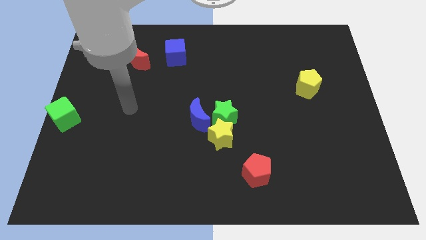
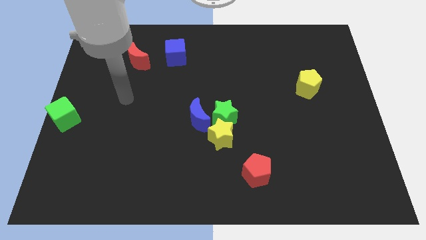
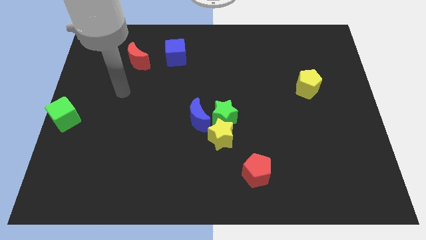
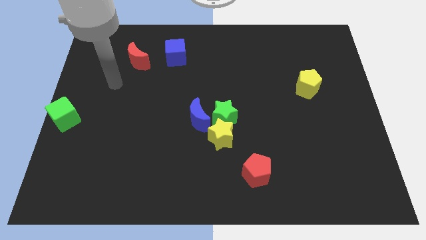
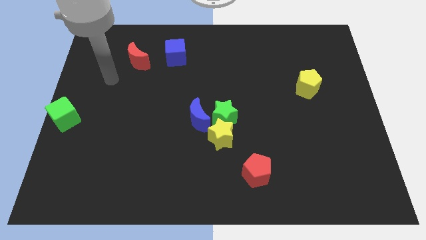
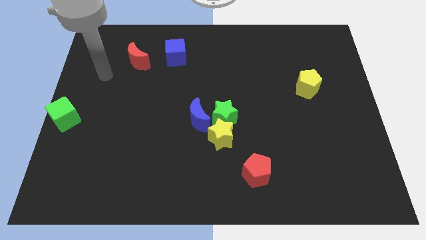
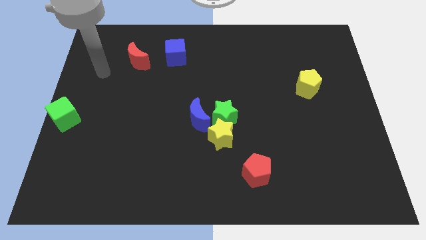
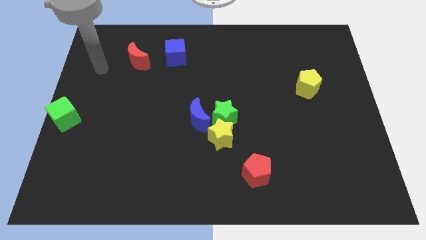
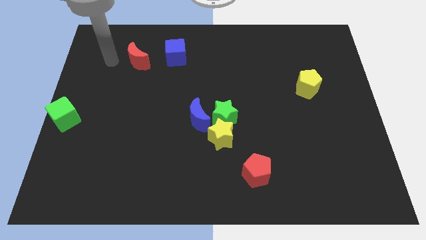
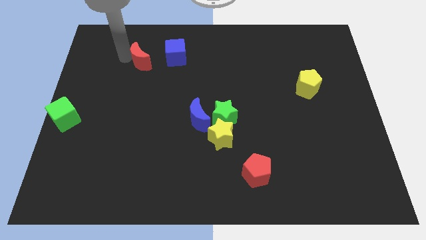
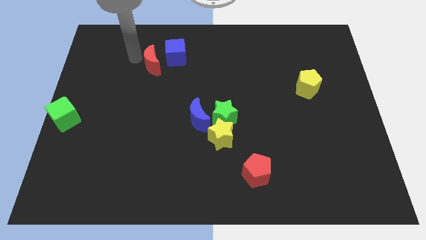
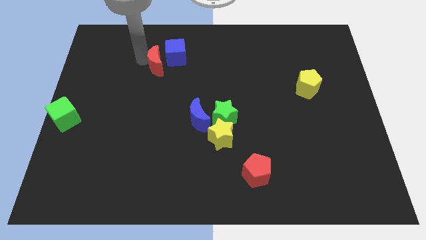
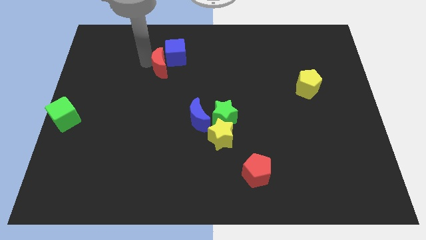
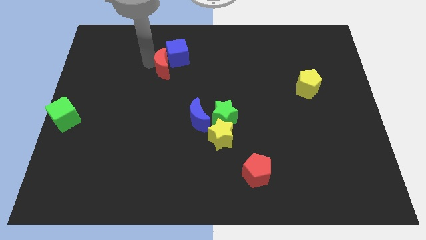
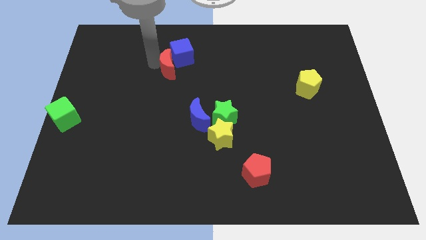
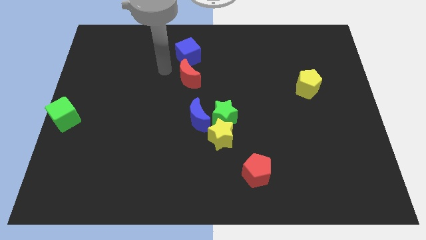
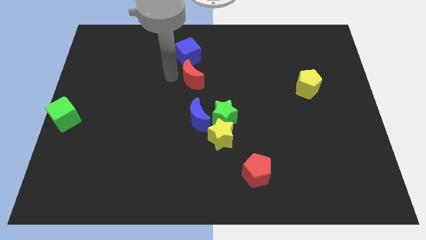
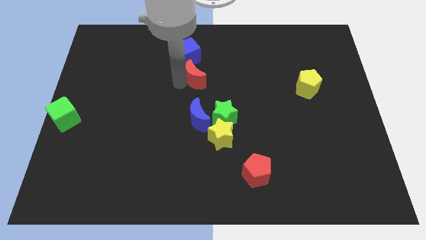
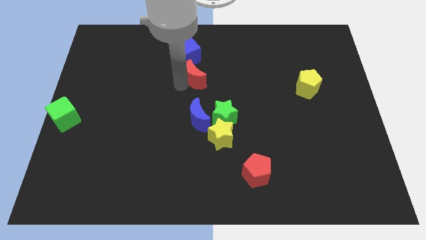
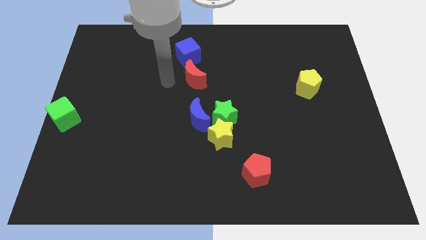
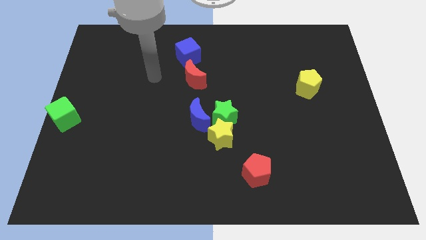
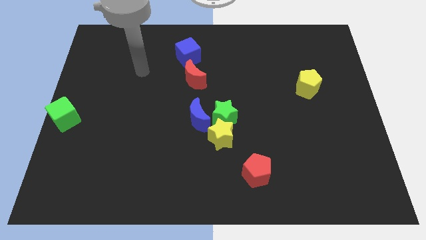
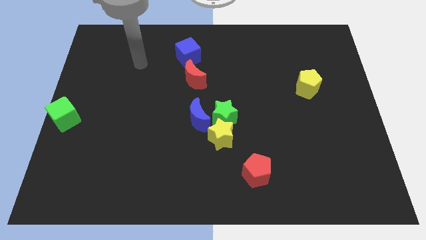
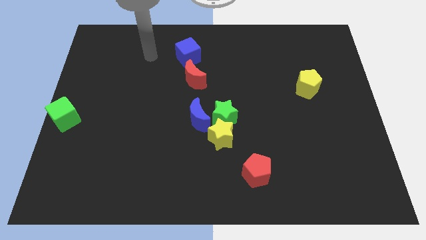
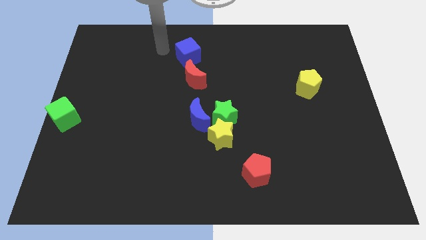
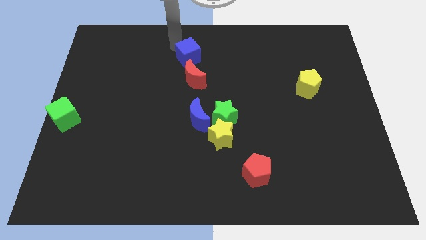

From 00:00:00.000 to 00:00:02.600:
move the red crescent underneath the blue cube

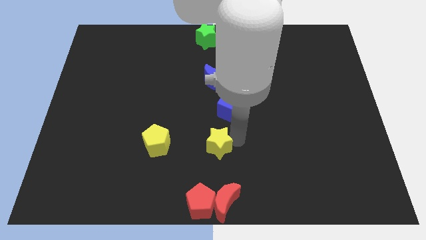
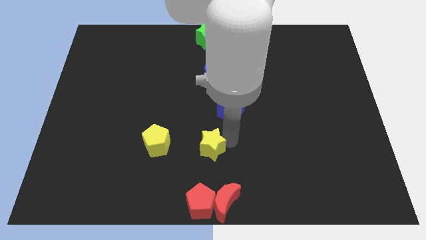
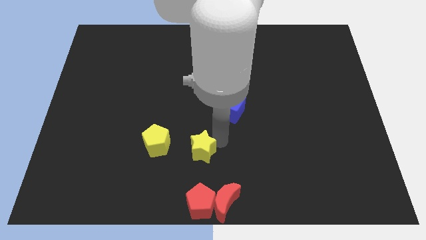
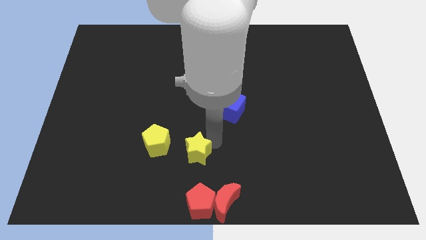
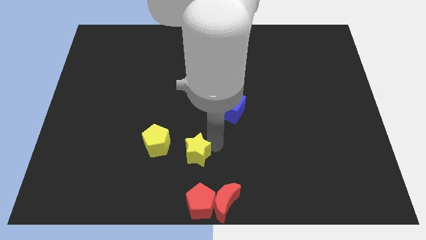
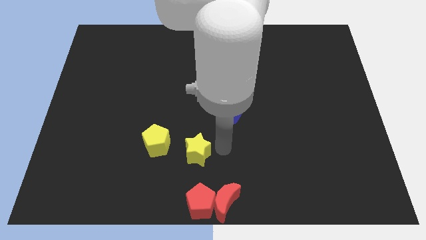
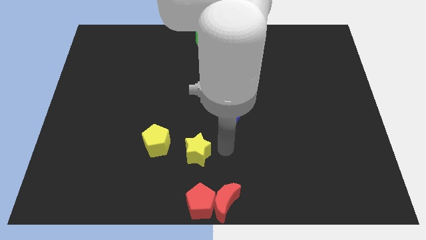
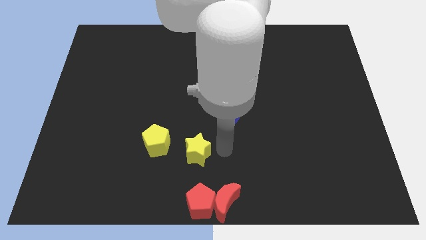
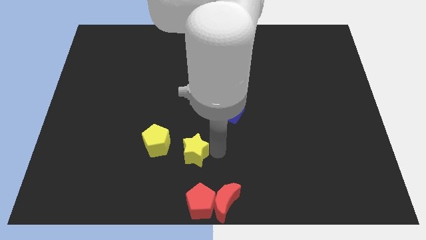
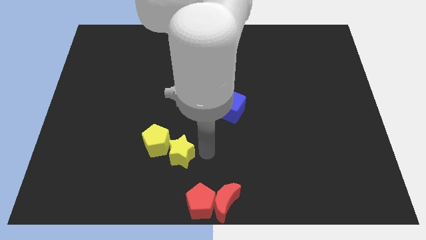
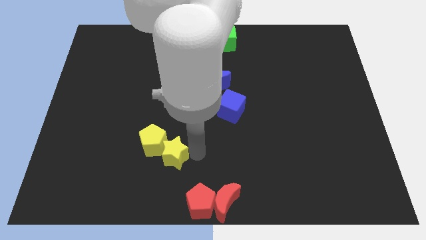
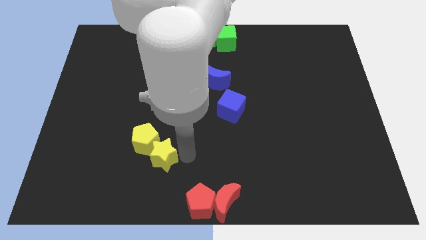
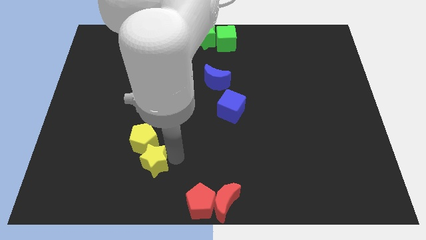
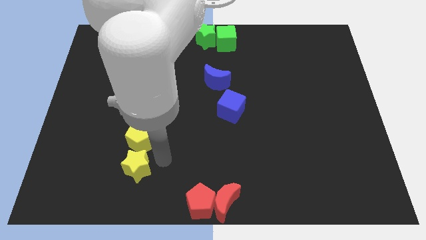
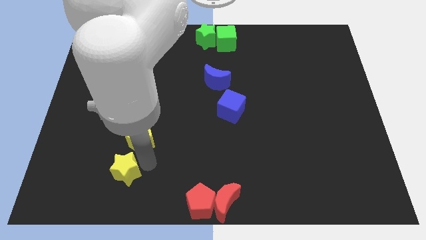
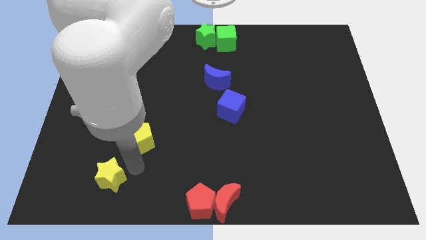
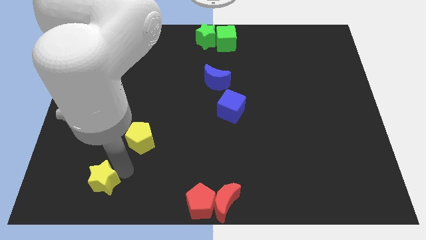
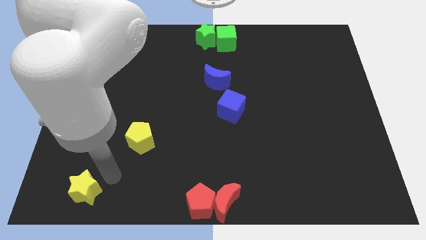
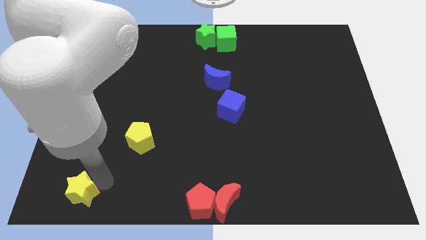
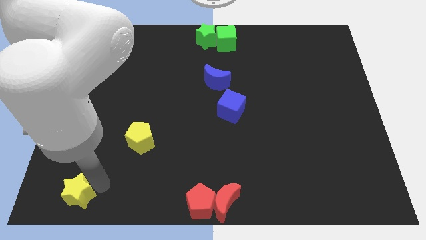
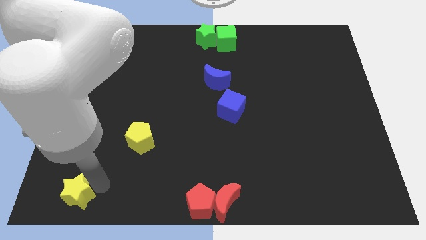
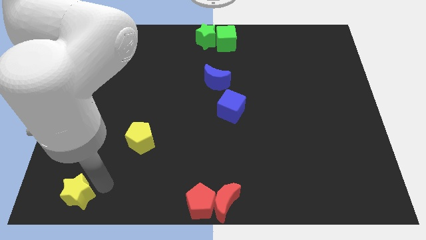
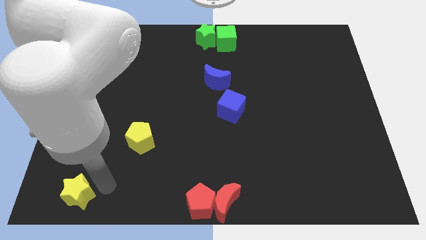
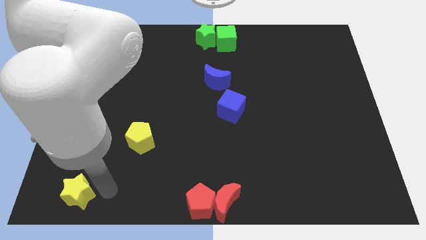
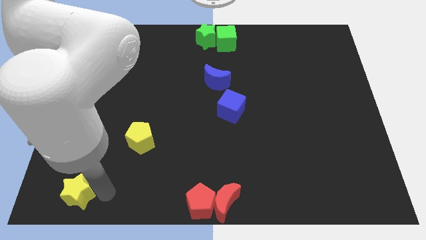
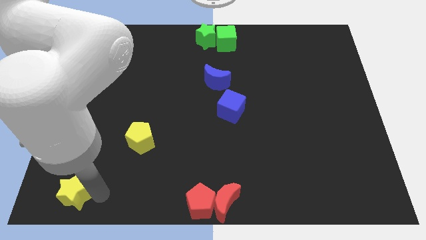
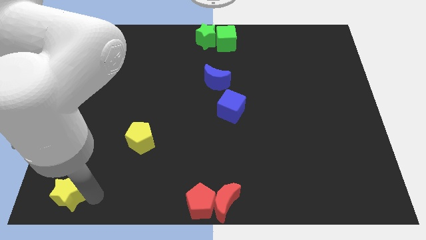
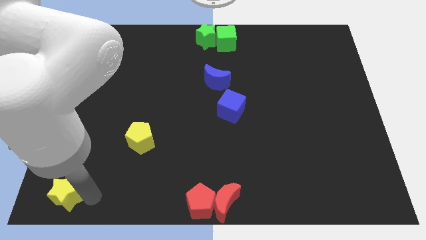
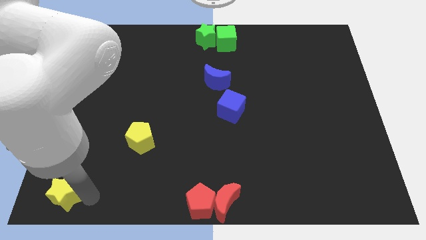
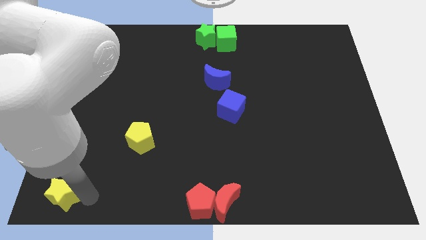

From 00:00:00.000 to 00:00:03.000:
move the yellow star bottom left

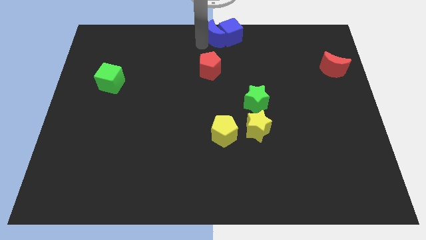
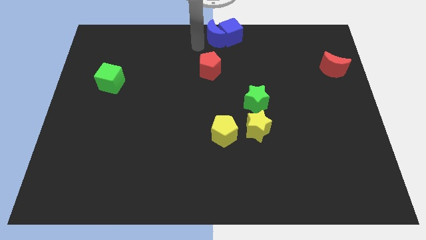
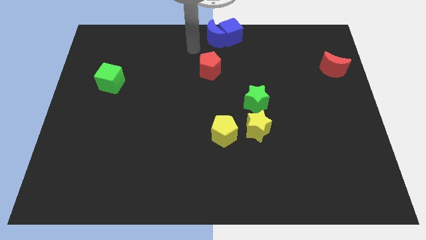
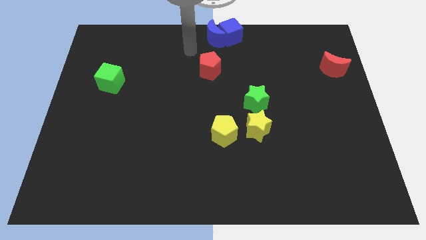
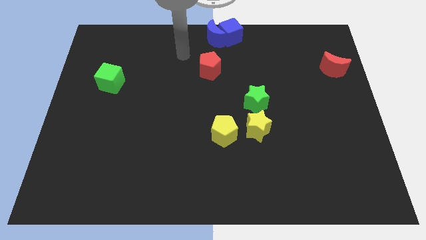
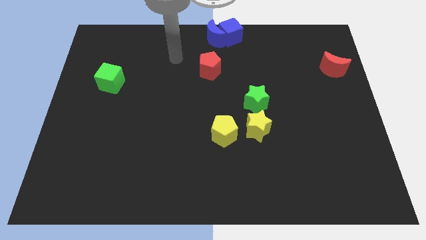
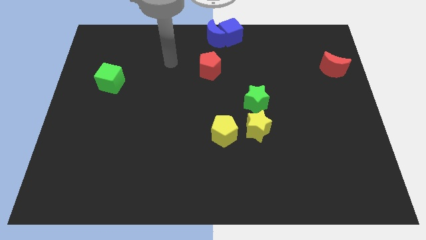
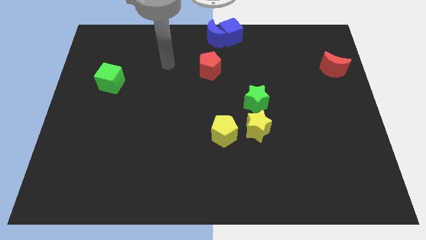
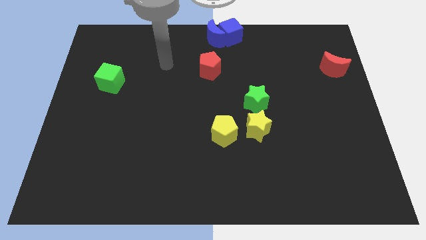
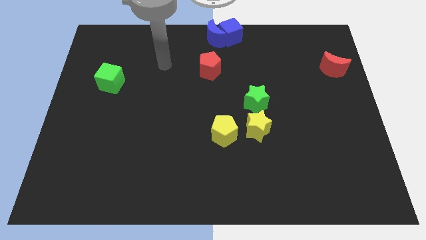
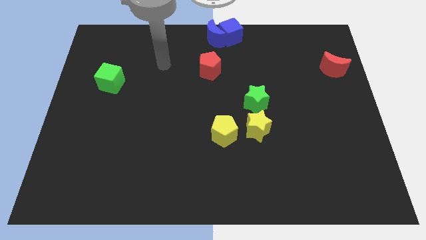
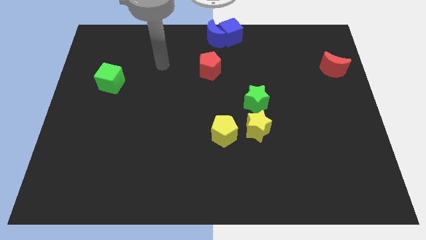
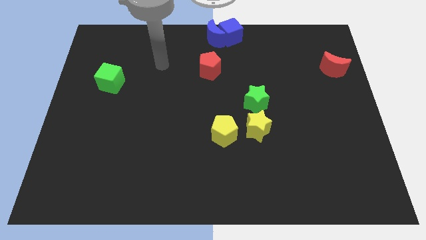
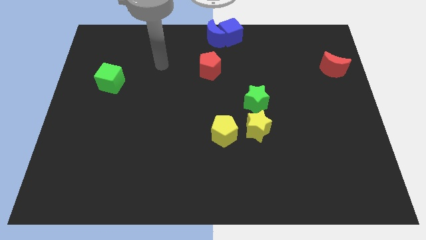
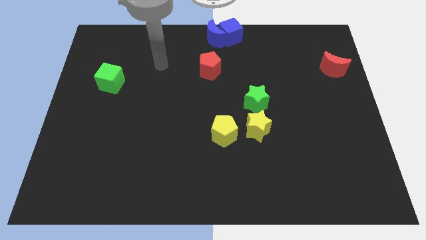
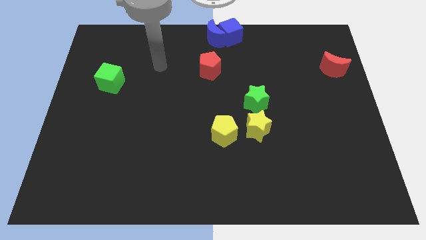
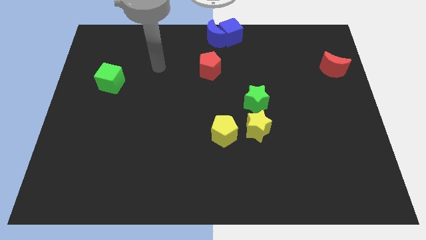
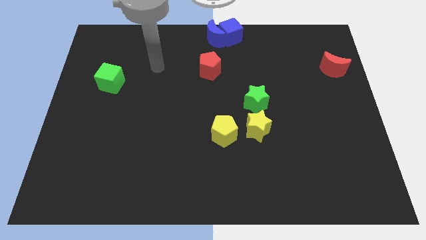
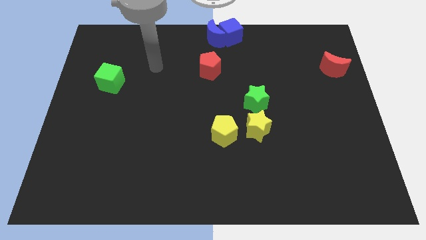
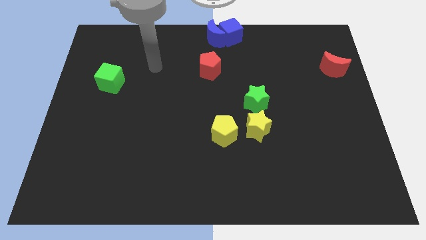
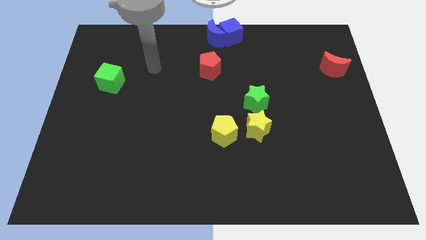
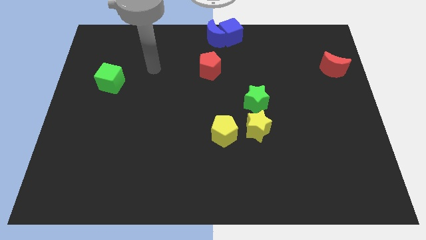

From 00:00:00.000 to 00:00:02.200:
go away from the blue moon

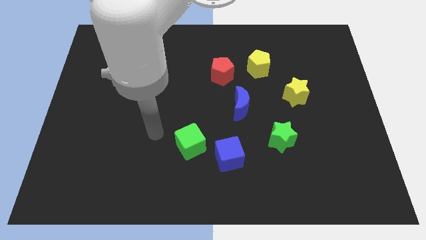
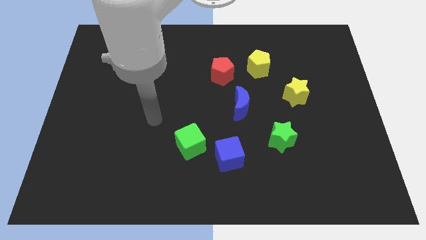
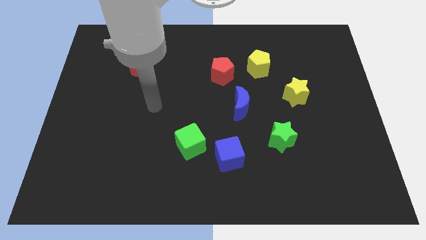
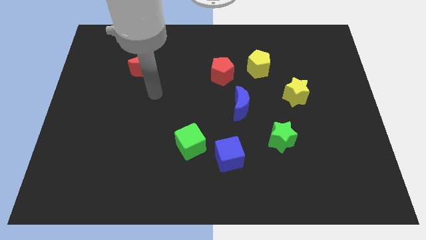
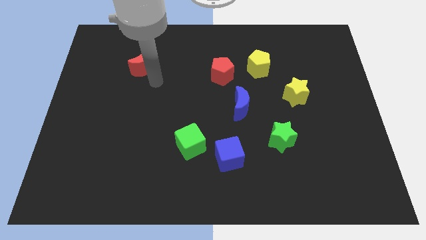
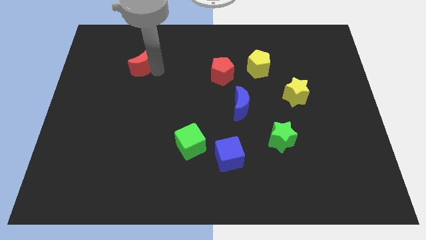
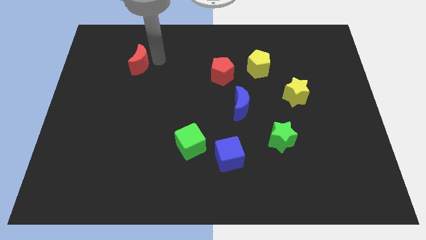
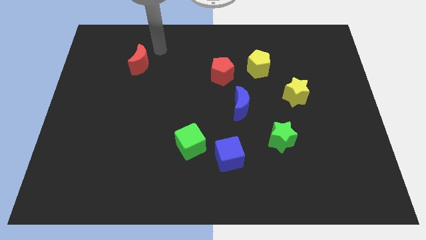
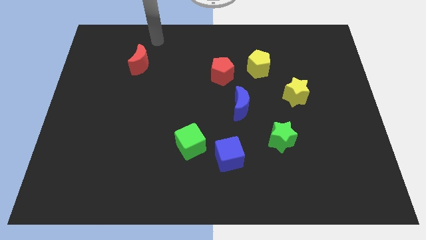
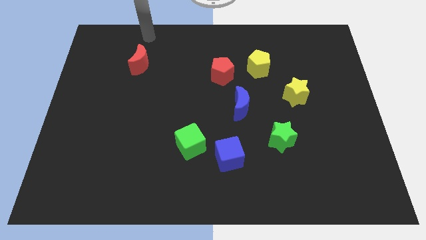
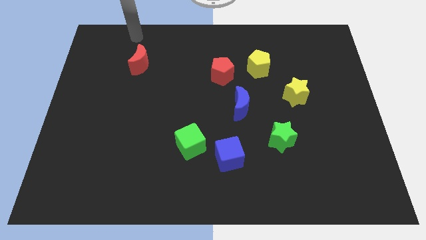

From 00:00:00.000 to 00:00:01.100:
move the arm towards the top left of the board

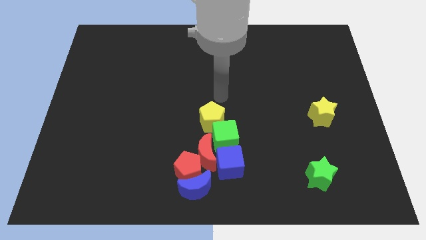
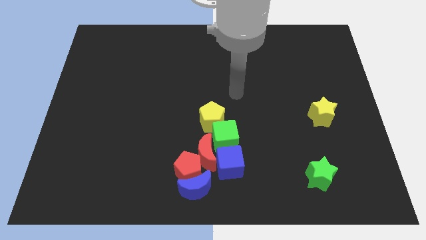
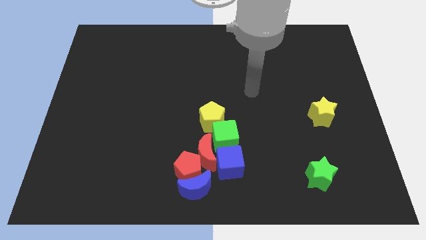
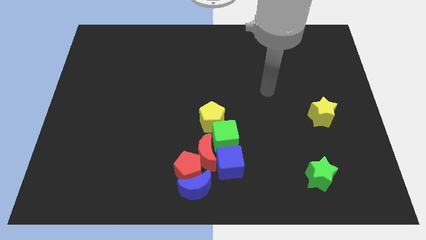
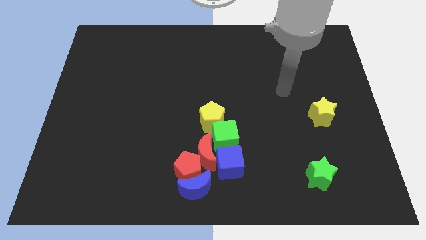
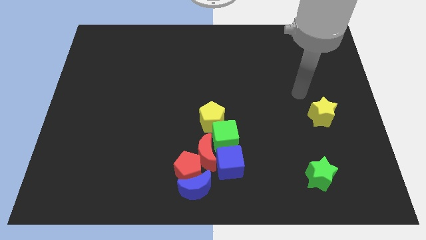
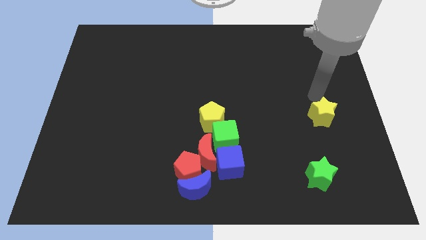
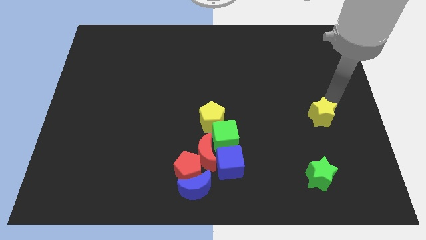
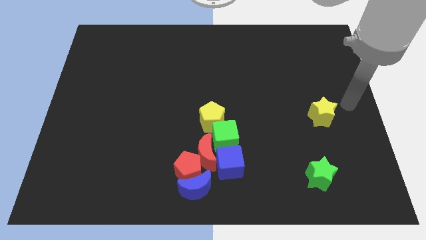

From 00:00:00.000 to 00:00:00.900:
move your arm away from yellow pentagon
